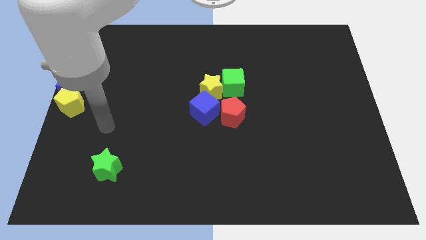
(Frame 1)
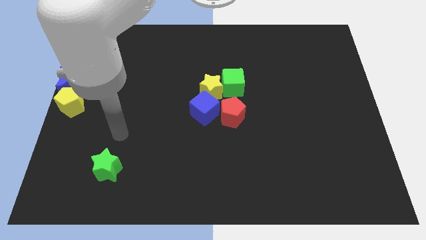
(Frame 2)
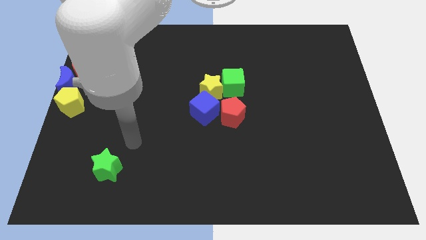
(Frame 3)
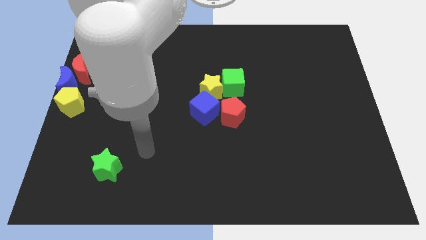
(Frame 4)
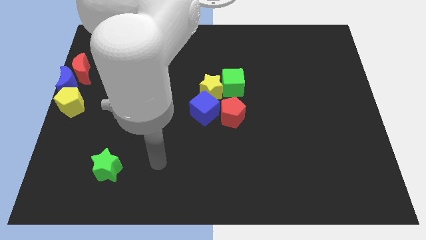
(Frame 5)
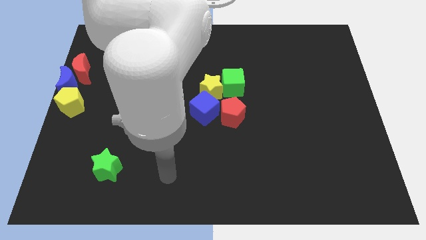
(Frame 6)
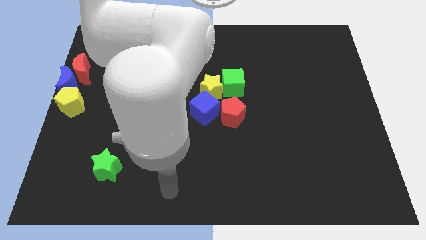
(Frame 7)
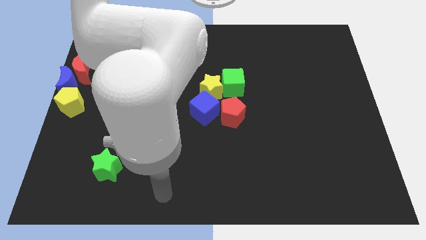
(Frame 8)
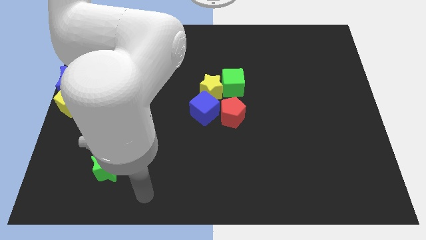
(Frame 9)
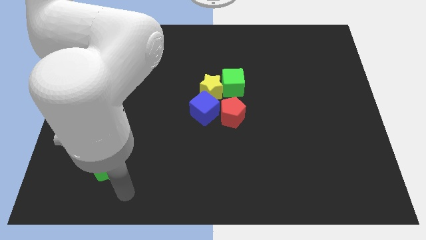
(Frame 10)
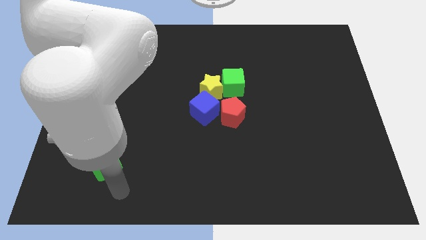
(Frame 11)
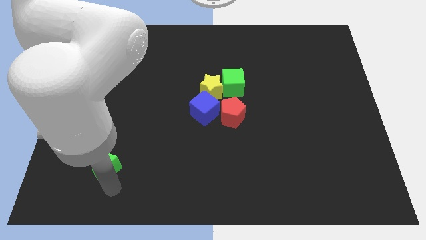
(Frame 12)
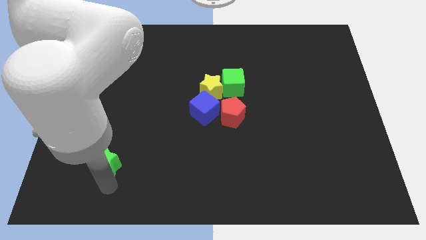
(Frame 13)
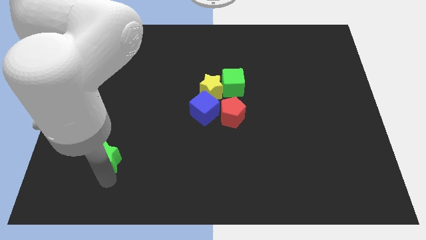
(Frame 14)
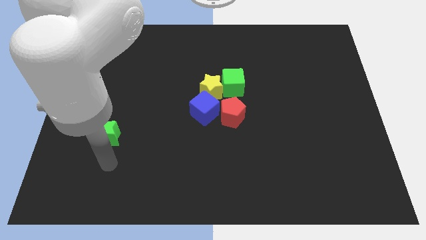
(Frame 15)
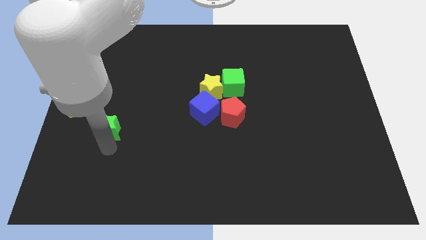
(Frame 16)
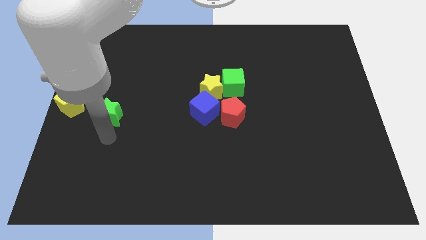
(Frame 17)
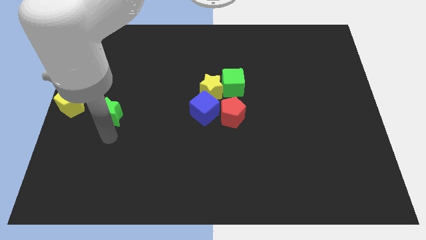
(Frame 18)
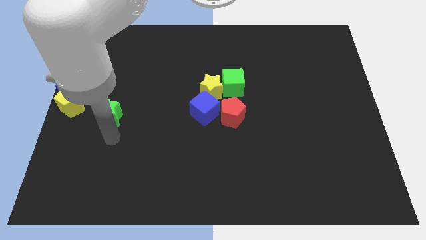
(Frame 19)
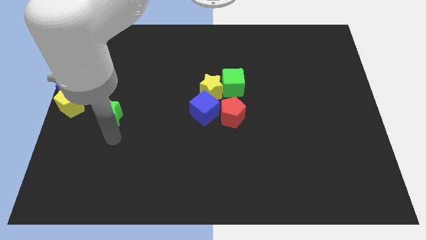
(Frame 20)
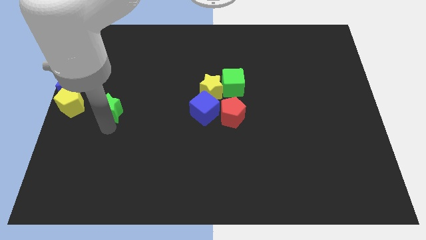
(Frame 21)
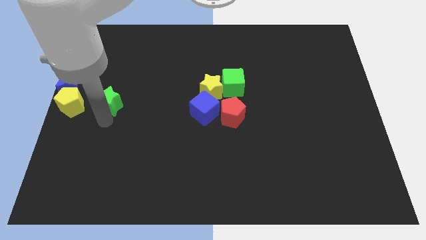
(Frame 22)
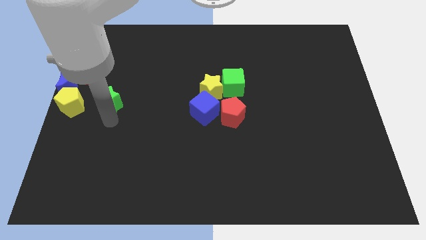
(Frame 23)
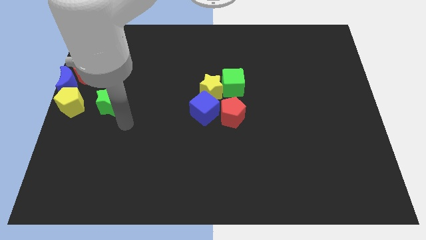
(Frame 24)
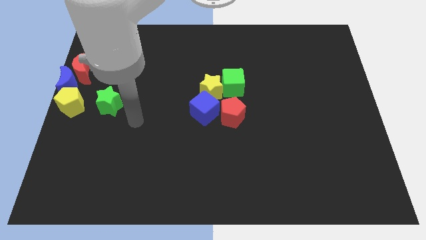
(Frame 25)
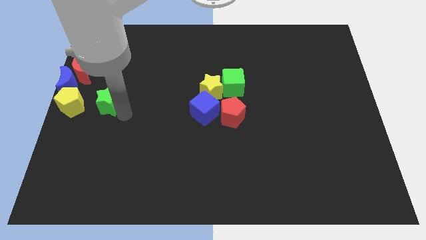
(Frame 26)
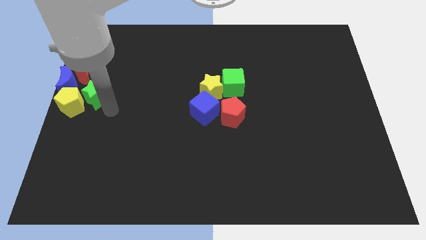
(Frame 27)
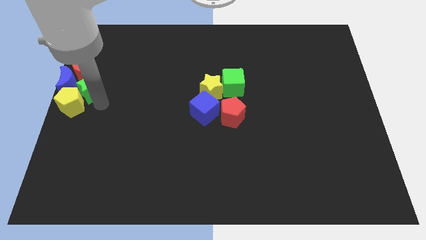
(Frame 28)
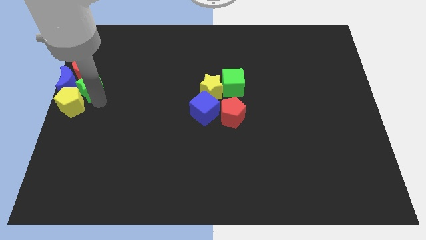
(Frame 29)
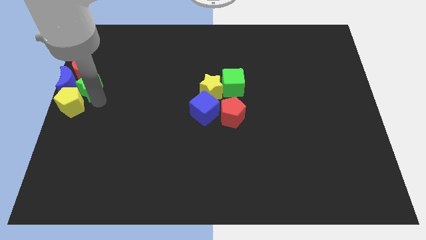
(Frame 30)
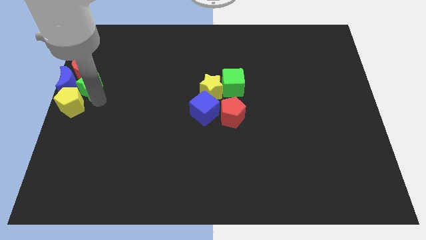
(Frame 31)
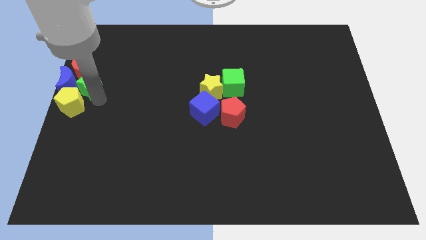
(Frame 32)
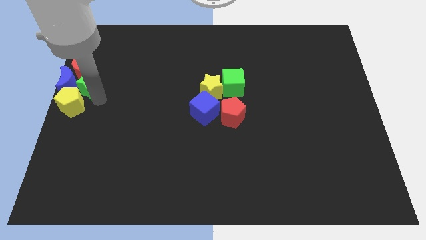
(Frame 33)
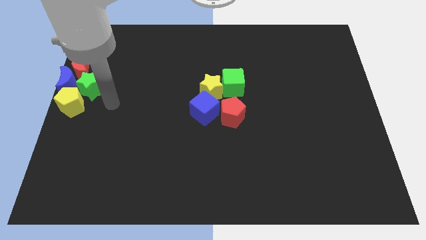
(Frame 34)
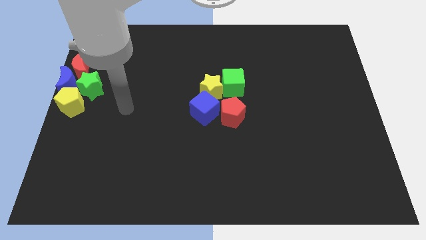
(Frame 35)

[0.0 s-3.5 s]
push the green star close to the blue crescent

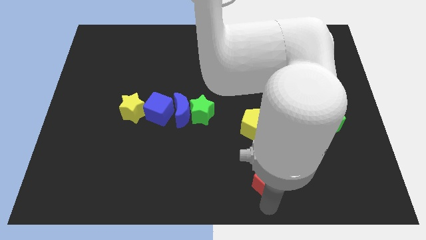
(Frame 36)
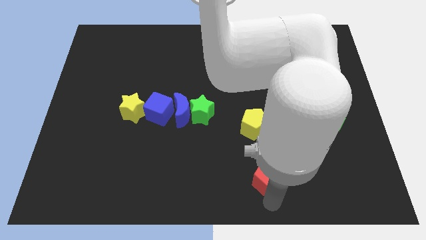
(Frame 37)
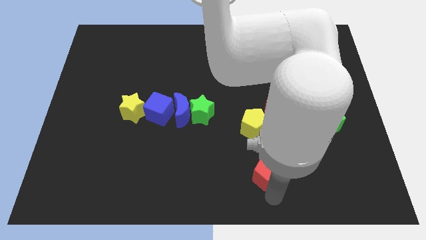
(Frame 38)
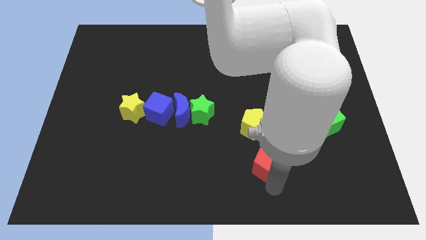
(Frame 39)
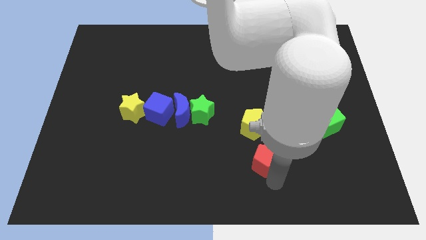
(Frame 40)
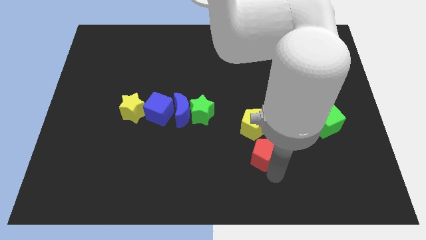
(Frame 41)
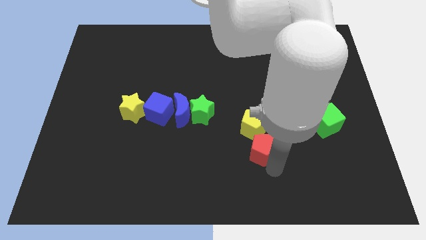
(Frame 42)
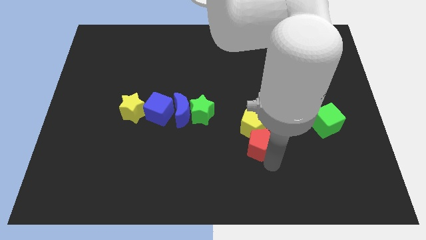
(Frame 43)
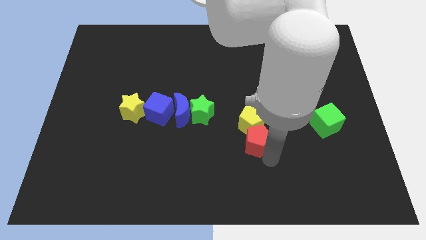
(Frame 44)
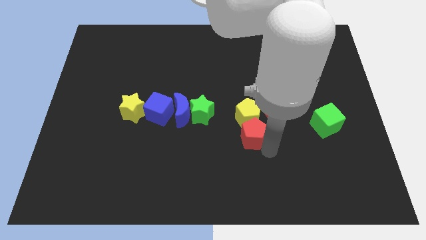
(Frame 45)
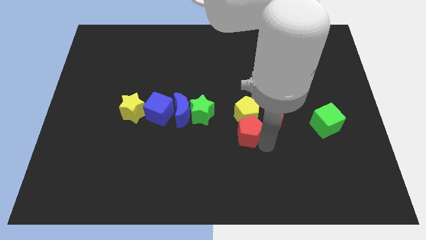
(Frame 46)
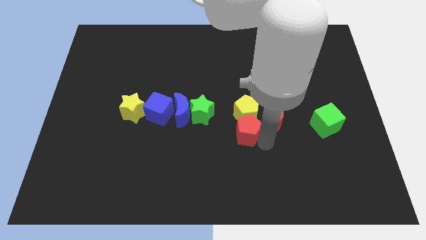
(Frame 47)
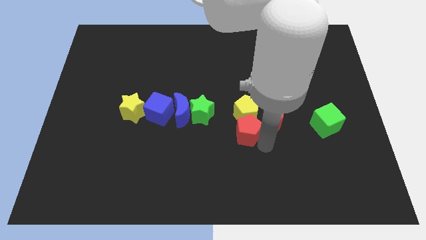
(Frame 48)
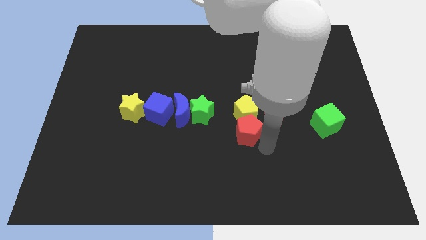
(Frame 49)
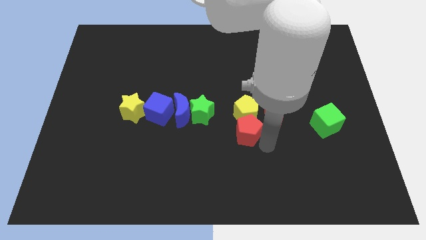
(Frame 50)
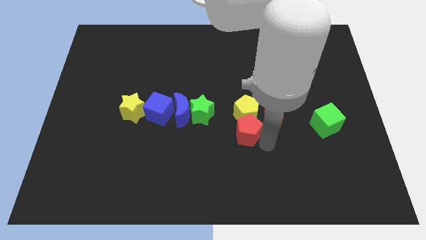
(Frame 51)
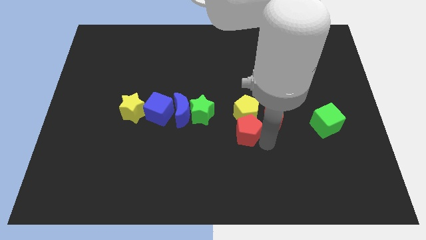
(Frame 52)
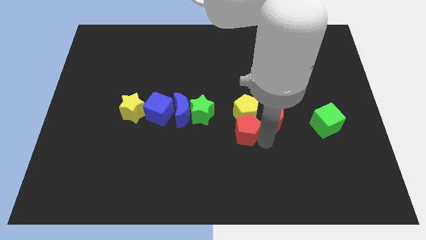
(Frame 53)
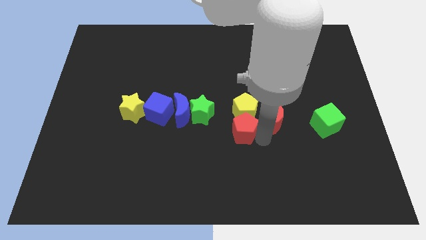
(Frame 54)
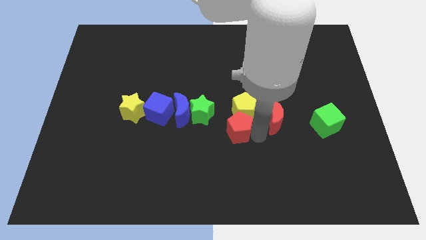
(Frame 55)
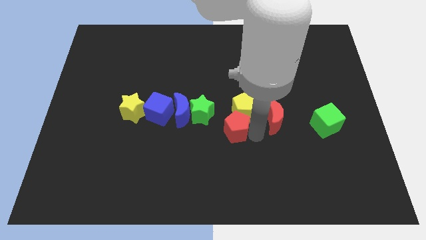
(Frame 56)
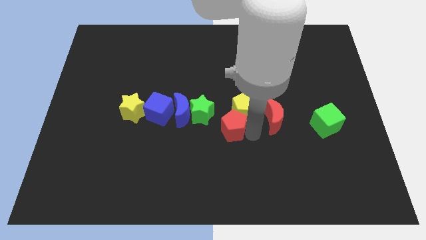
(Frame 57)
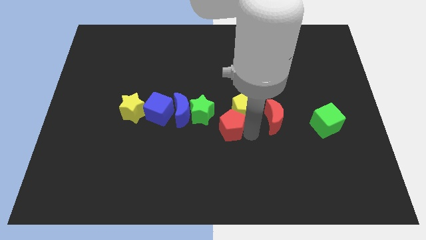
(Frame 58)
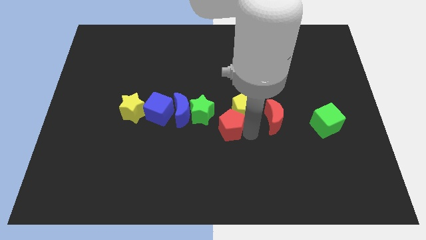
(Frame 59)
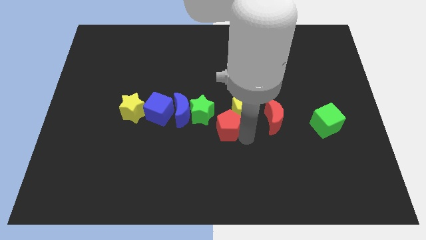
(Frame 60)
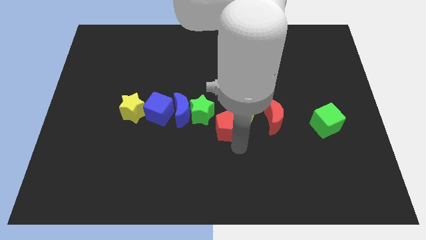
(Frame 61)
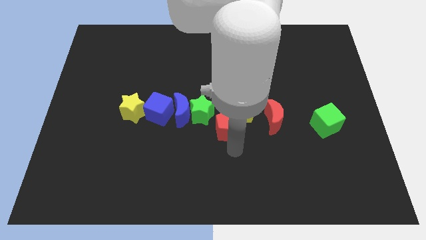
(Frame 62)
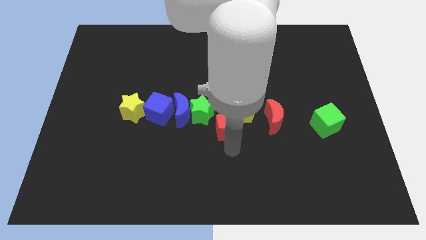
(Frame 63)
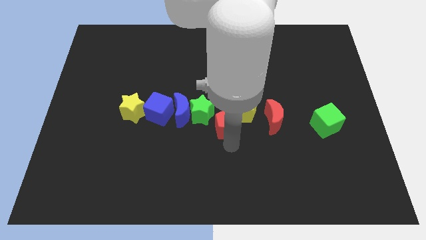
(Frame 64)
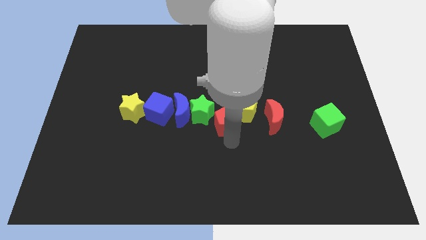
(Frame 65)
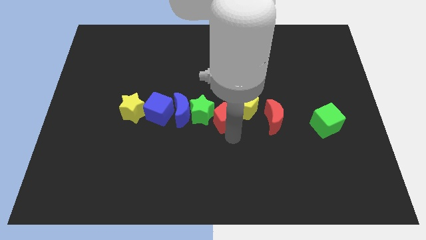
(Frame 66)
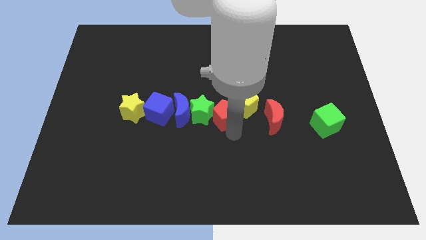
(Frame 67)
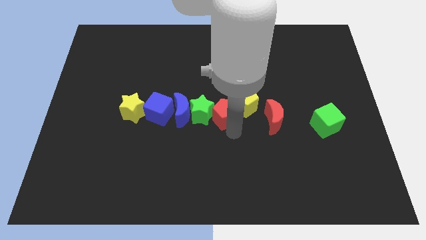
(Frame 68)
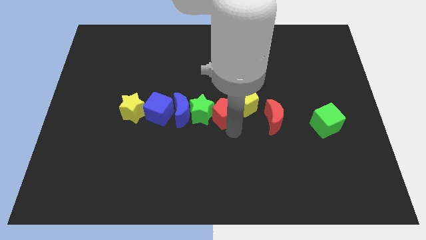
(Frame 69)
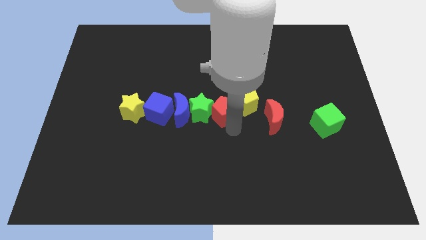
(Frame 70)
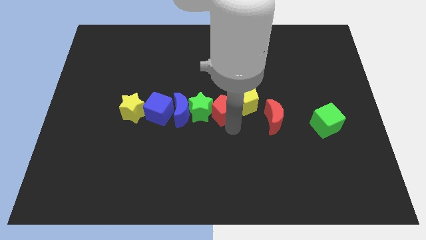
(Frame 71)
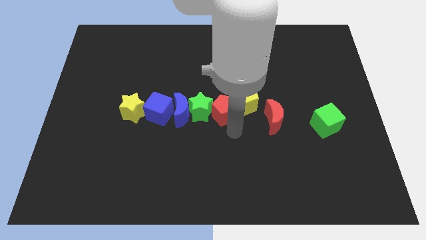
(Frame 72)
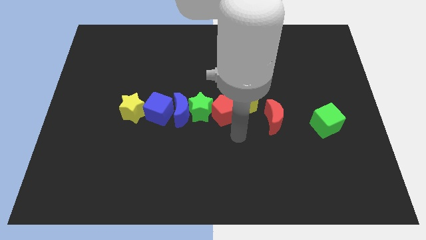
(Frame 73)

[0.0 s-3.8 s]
push the red pentagon into the green star

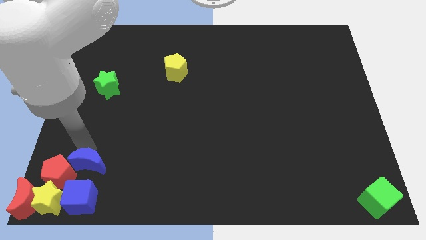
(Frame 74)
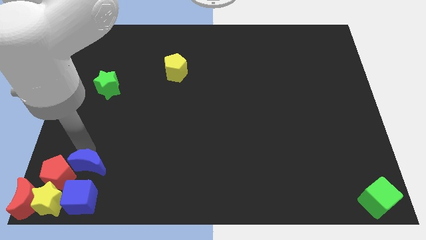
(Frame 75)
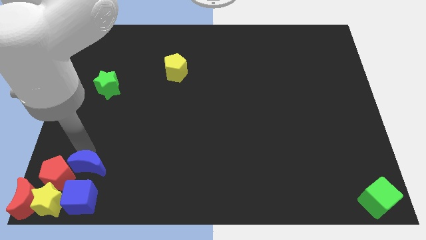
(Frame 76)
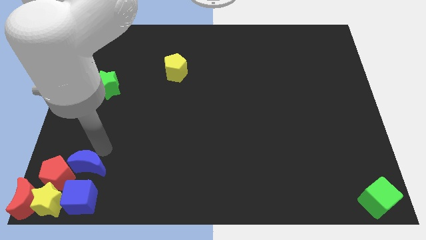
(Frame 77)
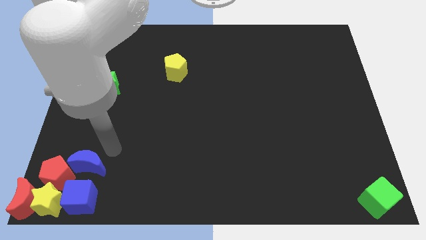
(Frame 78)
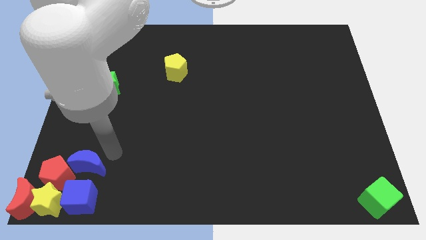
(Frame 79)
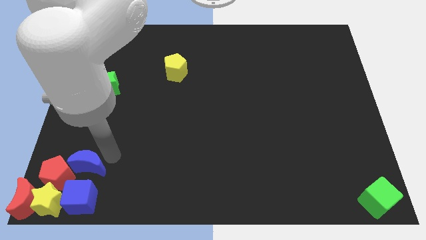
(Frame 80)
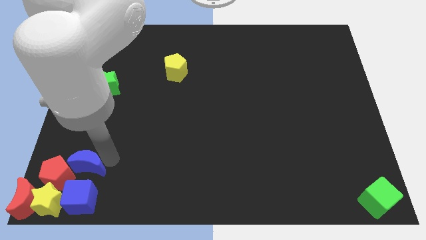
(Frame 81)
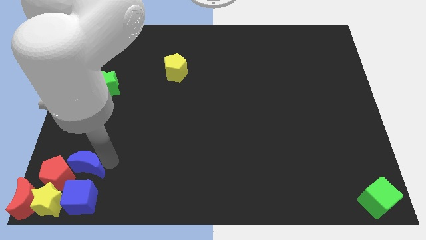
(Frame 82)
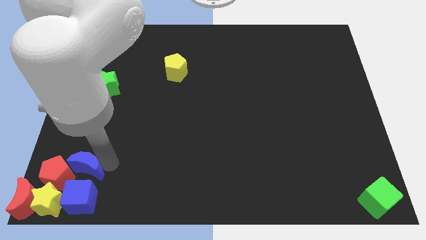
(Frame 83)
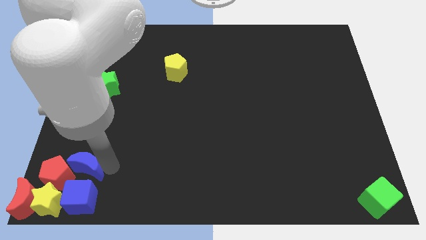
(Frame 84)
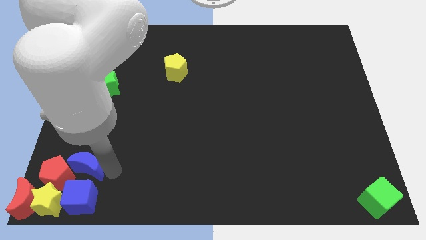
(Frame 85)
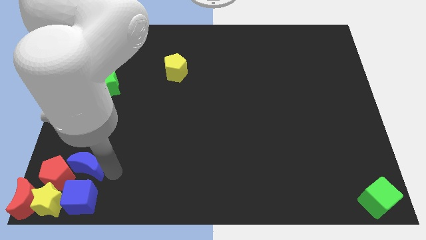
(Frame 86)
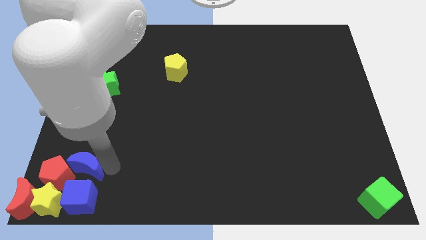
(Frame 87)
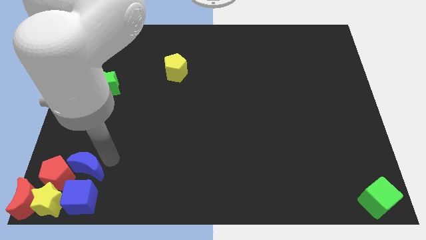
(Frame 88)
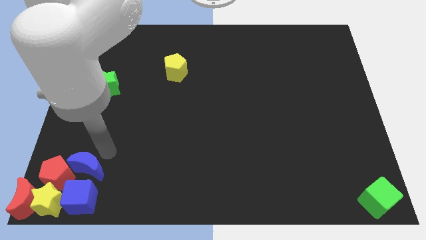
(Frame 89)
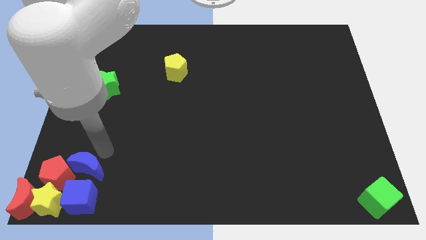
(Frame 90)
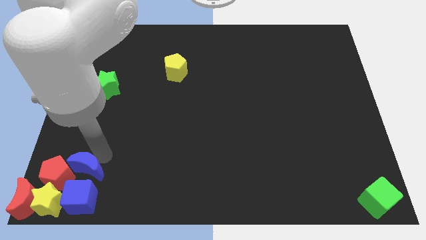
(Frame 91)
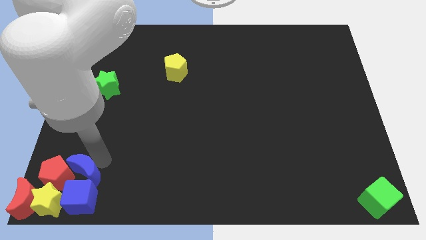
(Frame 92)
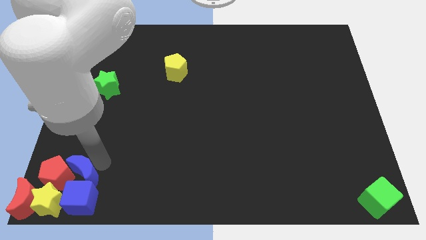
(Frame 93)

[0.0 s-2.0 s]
push the blue crescent close to the red pentagon towards the bottom left corner of thee board
